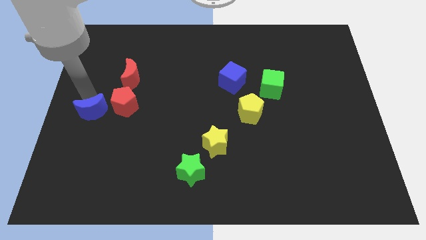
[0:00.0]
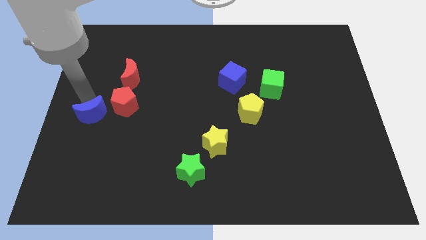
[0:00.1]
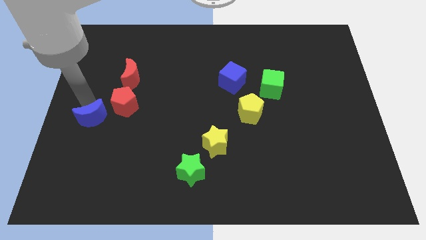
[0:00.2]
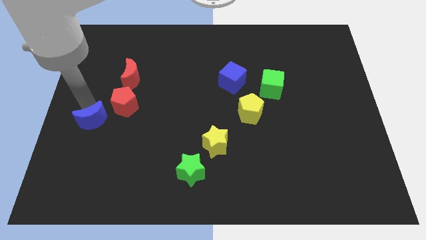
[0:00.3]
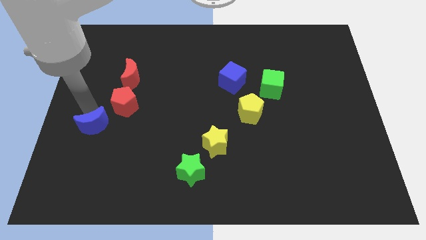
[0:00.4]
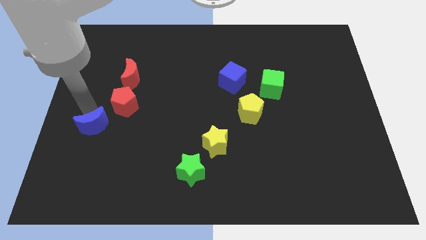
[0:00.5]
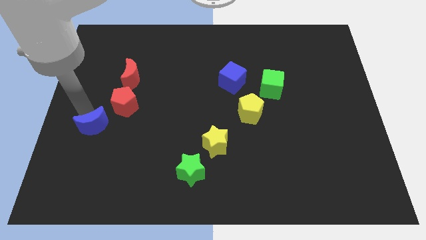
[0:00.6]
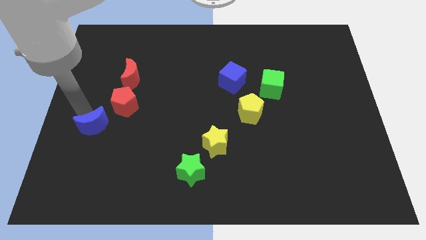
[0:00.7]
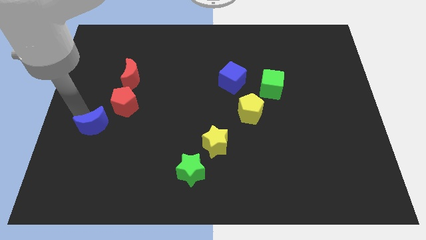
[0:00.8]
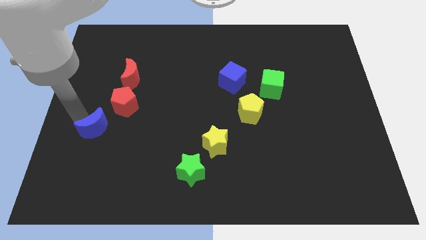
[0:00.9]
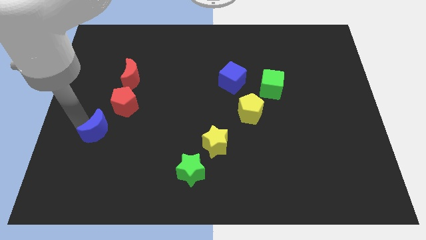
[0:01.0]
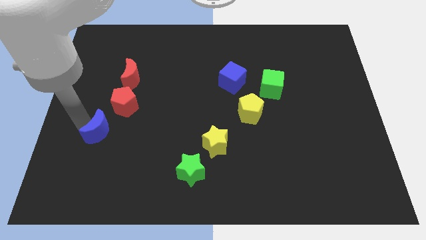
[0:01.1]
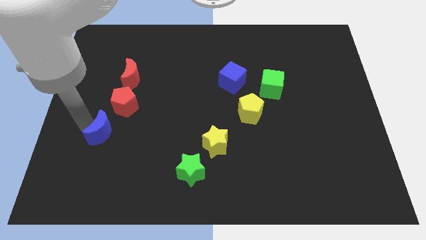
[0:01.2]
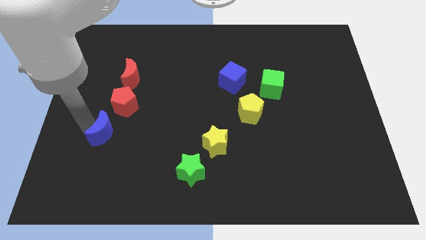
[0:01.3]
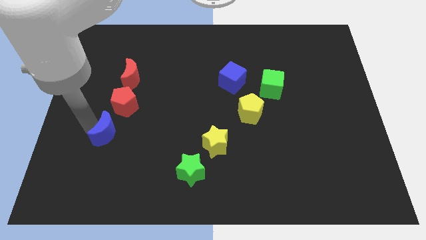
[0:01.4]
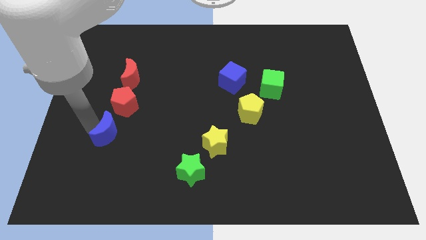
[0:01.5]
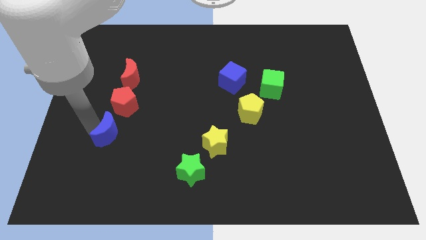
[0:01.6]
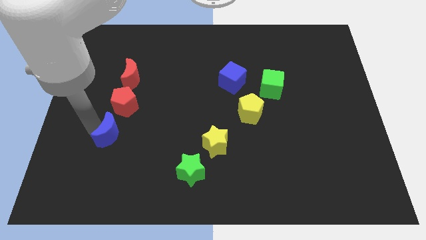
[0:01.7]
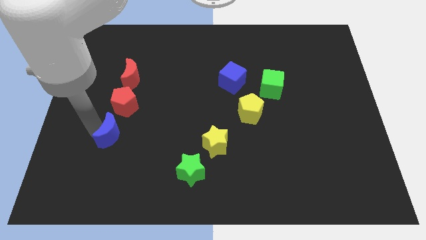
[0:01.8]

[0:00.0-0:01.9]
place blue moon to the bottom of the red pentagon

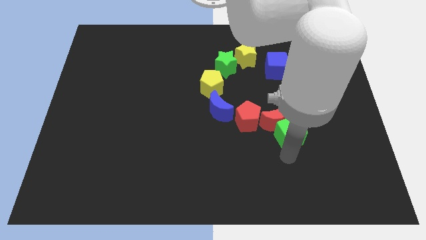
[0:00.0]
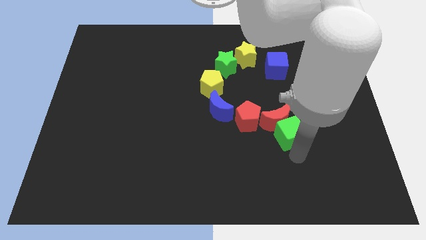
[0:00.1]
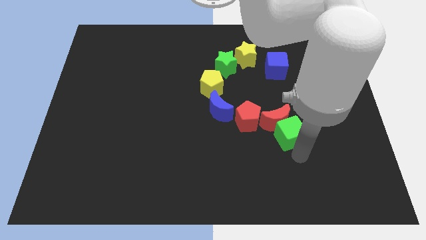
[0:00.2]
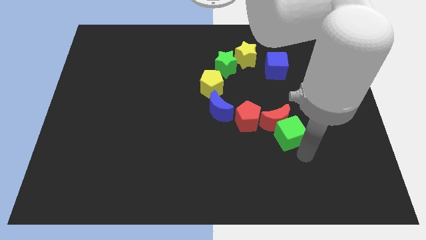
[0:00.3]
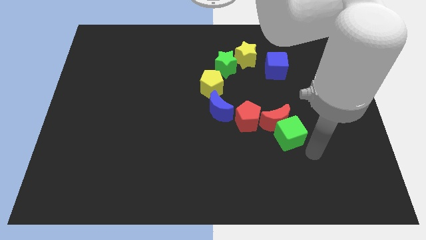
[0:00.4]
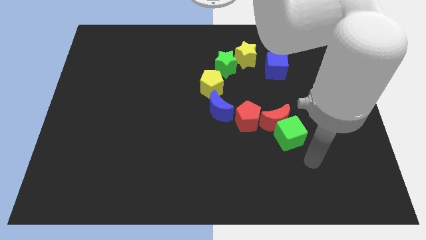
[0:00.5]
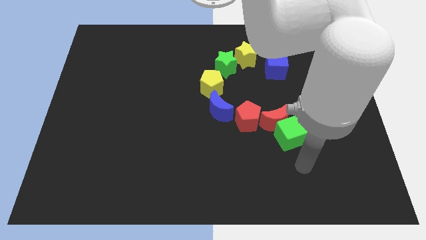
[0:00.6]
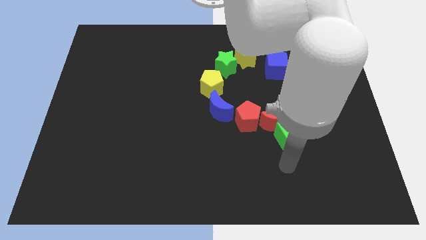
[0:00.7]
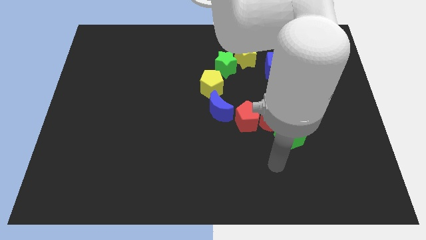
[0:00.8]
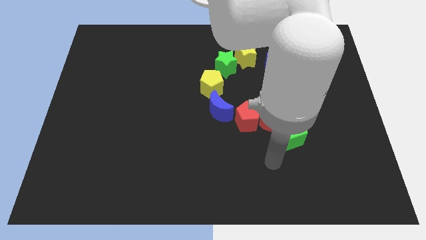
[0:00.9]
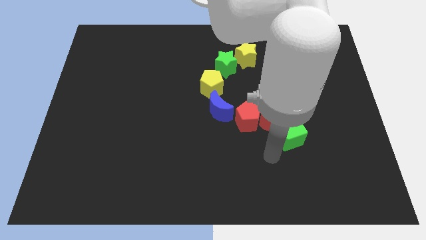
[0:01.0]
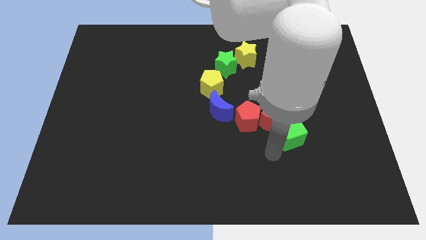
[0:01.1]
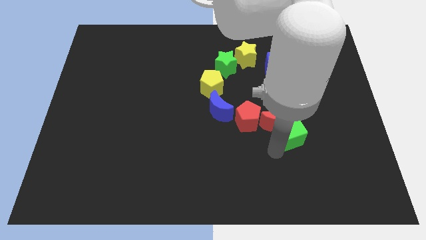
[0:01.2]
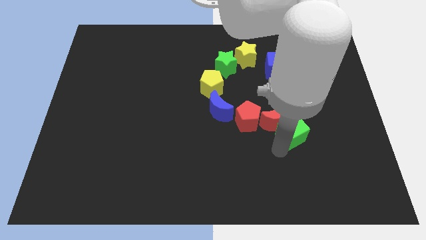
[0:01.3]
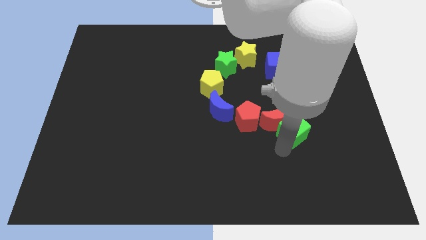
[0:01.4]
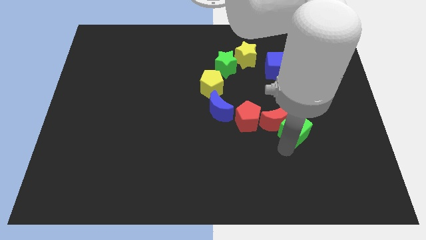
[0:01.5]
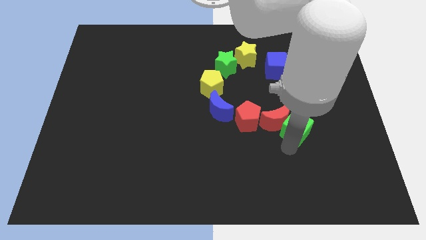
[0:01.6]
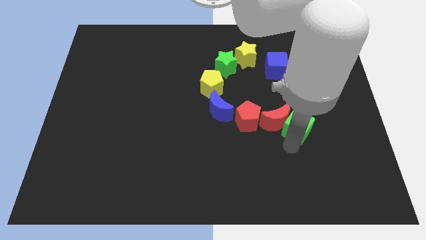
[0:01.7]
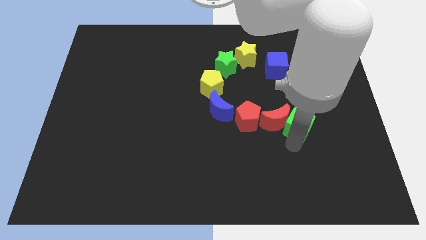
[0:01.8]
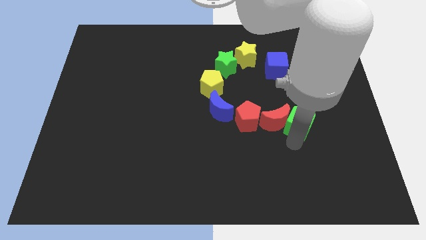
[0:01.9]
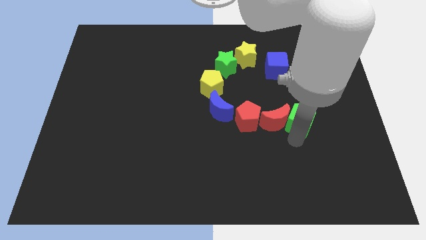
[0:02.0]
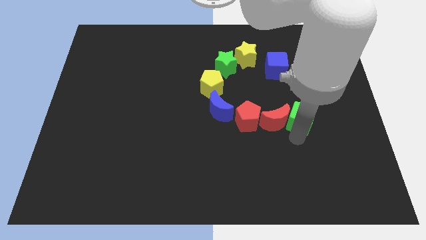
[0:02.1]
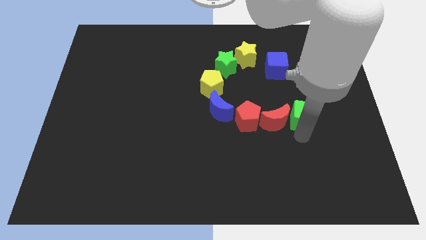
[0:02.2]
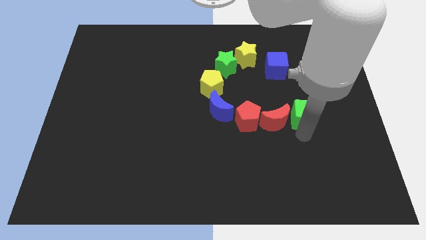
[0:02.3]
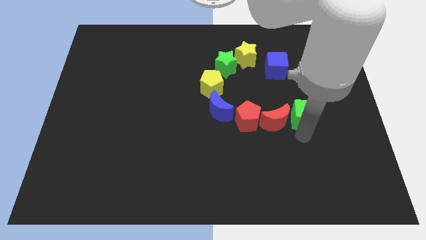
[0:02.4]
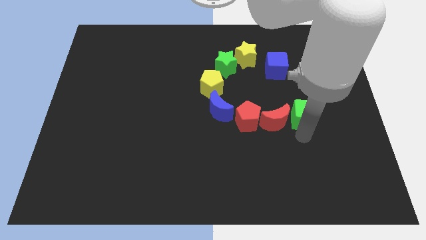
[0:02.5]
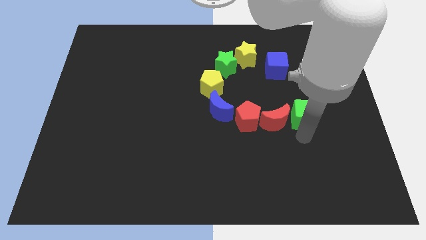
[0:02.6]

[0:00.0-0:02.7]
move green cube right beside the red moon

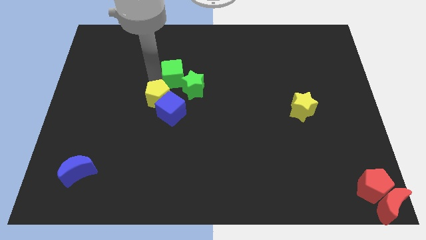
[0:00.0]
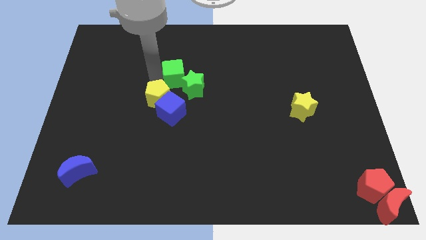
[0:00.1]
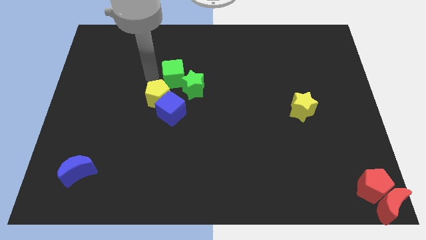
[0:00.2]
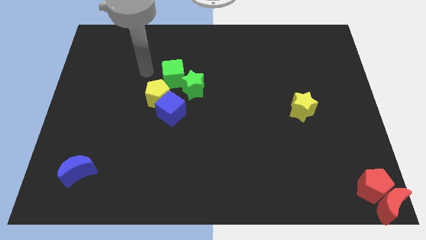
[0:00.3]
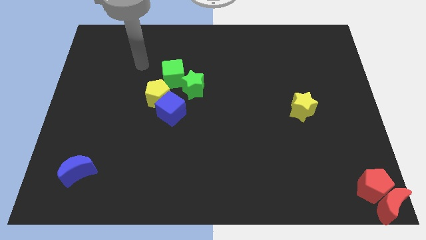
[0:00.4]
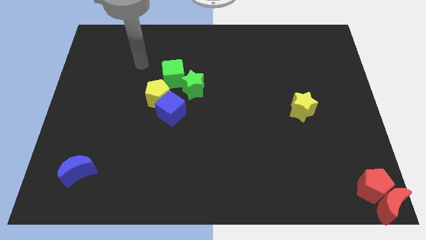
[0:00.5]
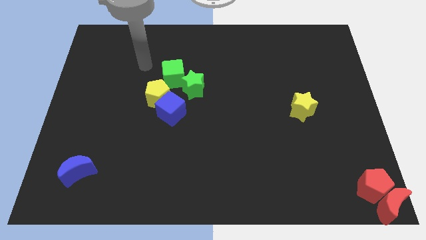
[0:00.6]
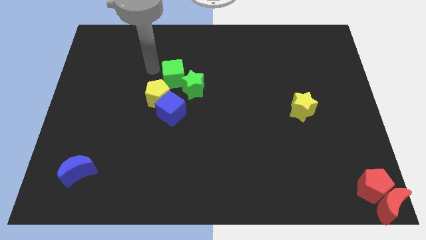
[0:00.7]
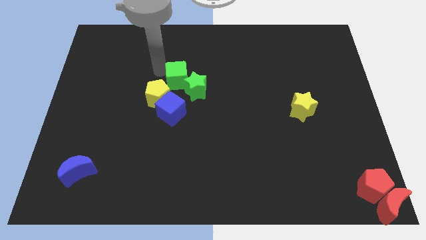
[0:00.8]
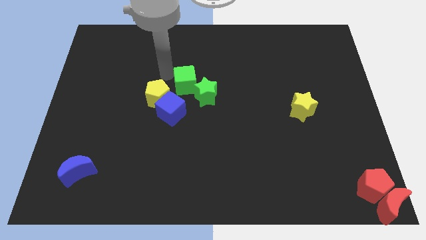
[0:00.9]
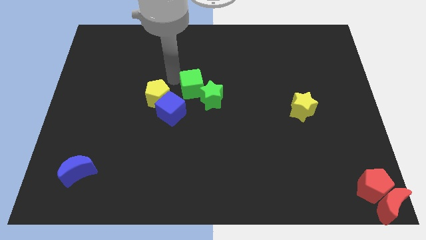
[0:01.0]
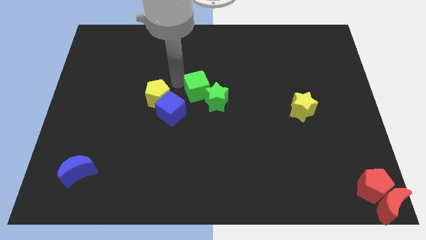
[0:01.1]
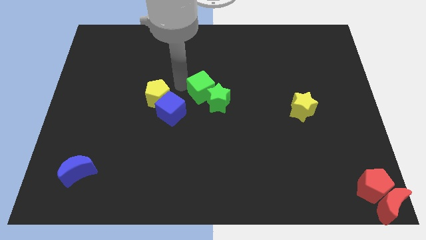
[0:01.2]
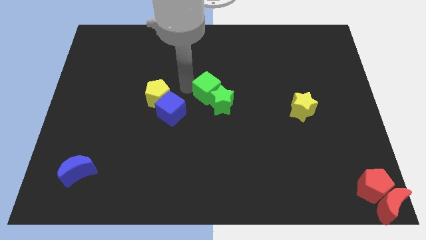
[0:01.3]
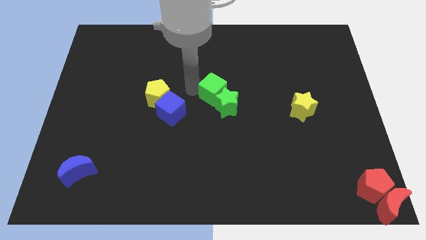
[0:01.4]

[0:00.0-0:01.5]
push the green cube along with green star horizontally

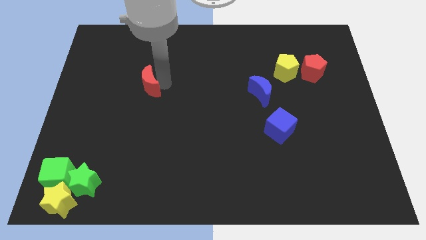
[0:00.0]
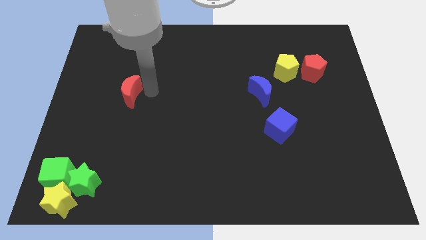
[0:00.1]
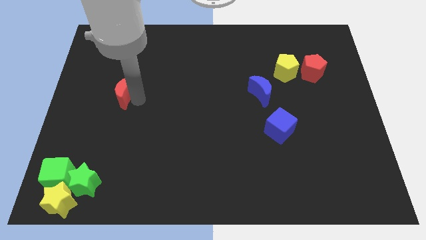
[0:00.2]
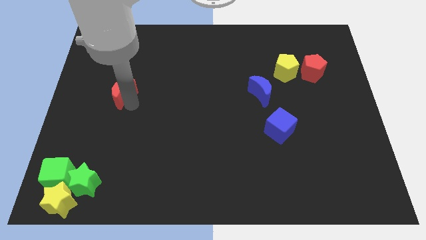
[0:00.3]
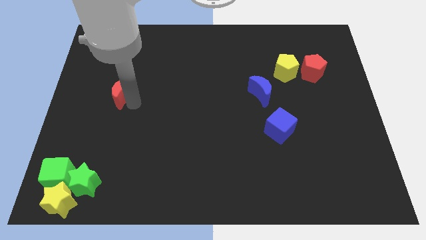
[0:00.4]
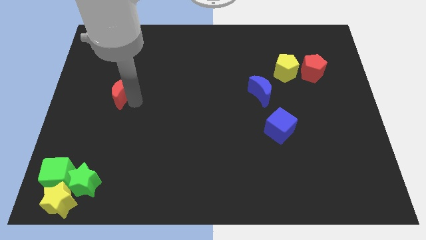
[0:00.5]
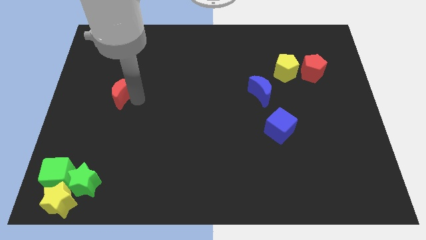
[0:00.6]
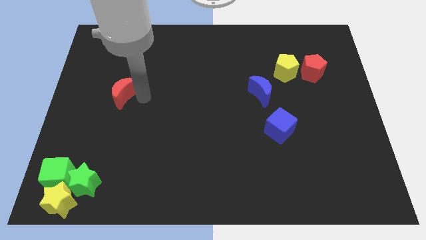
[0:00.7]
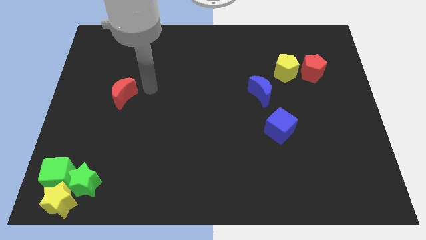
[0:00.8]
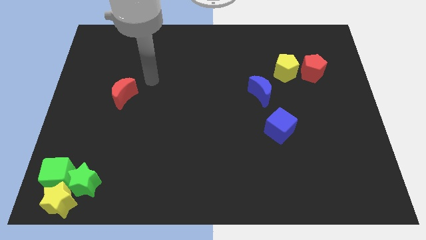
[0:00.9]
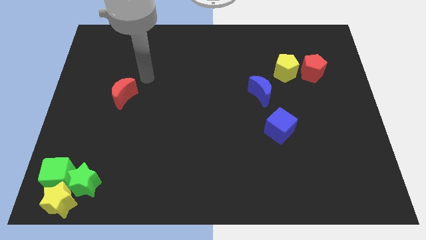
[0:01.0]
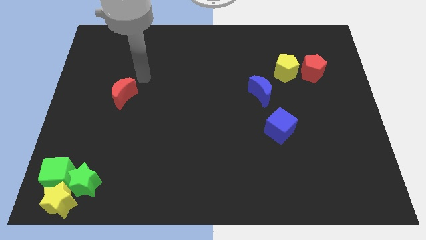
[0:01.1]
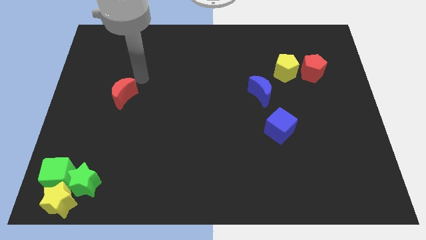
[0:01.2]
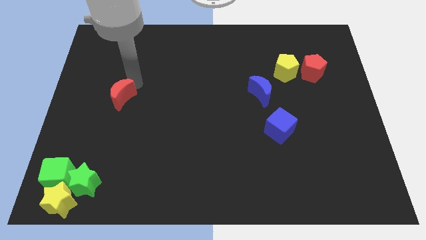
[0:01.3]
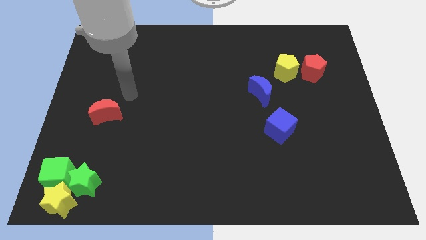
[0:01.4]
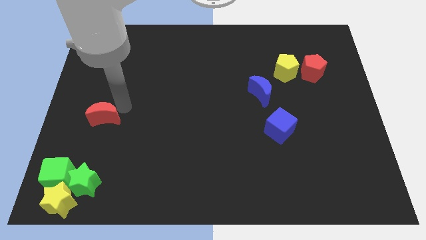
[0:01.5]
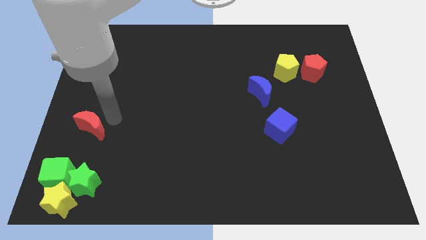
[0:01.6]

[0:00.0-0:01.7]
put the red moon vertically above the green star

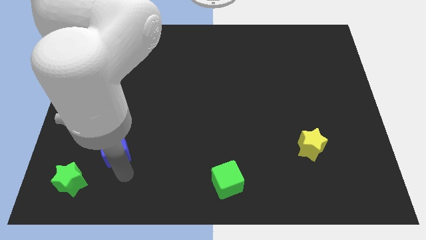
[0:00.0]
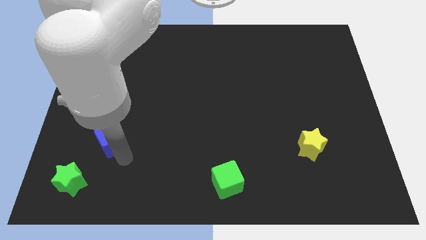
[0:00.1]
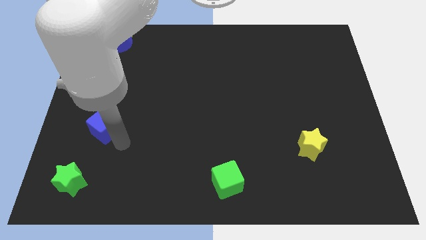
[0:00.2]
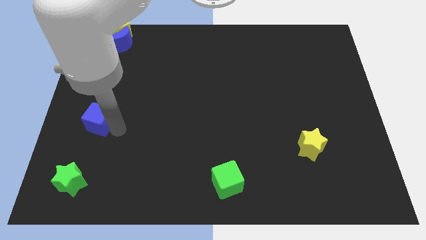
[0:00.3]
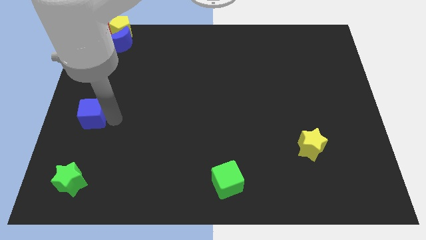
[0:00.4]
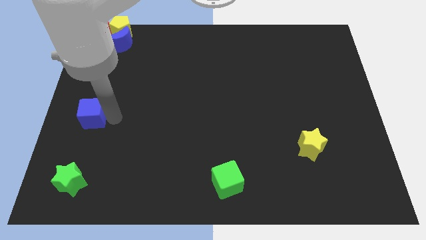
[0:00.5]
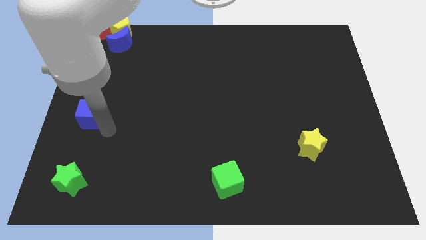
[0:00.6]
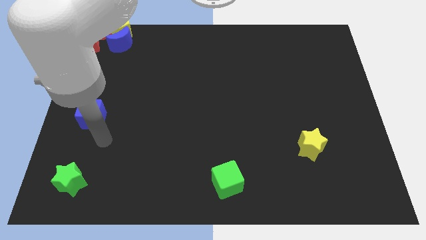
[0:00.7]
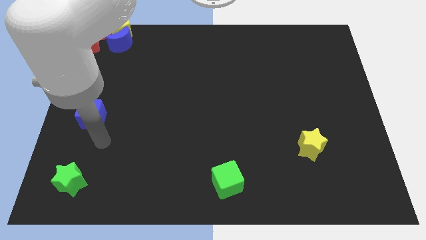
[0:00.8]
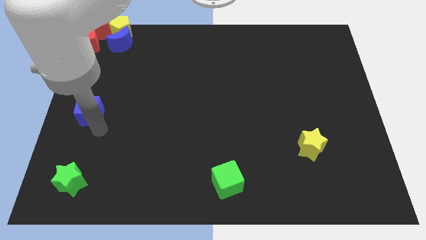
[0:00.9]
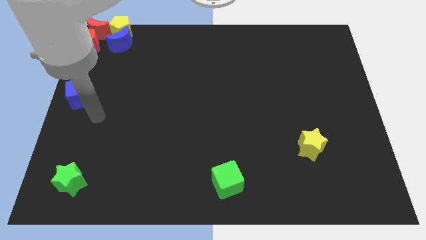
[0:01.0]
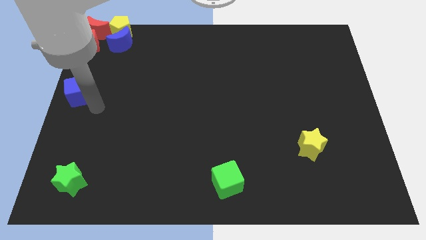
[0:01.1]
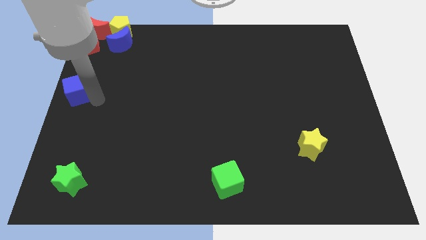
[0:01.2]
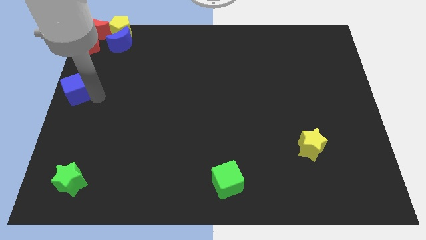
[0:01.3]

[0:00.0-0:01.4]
drag the blue cube slightly upwards
